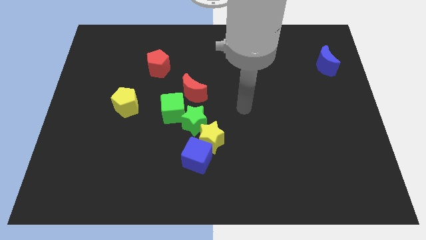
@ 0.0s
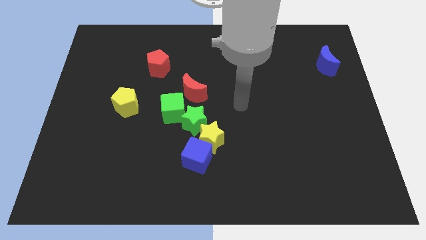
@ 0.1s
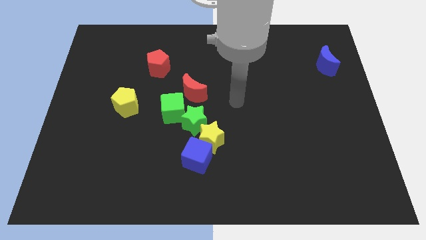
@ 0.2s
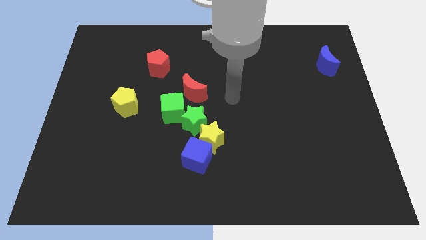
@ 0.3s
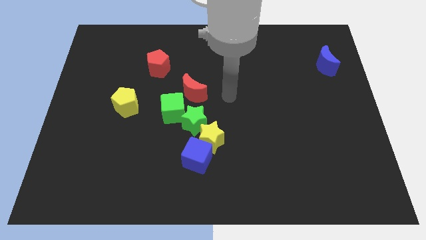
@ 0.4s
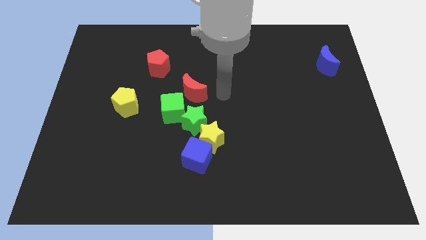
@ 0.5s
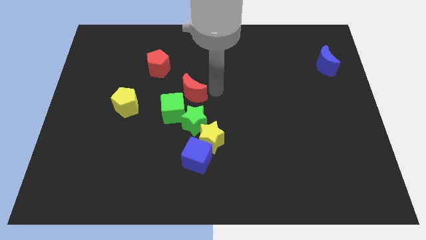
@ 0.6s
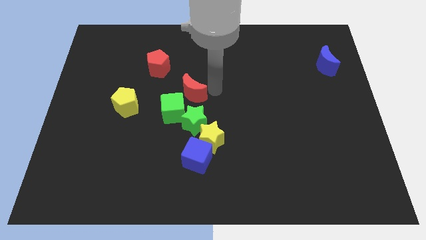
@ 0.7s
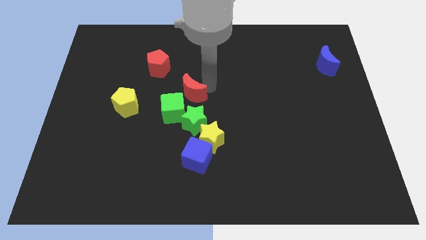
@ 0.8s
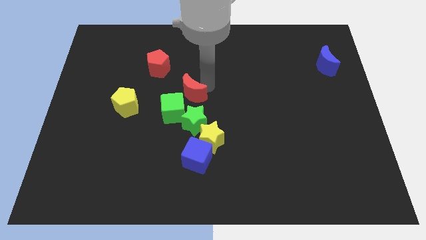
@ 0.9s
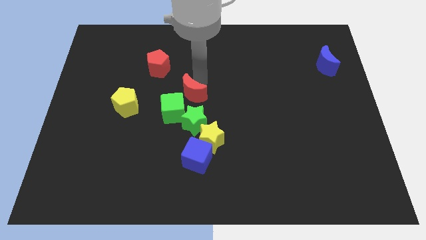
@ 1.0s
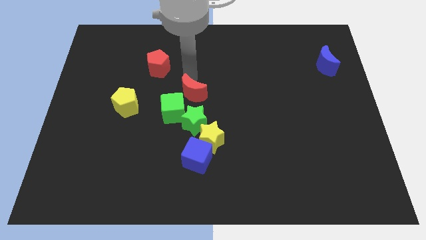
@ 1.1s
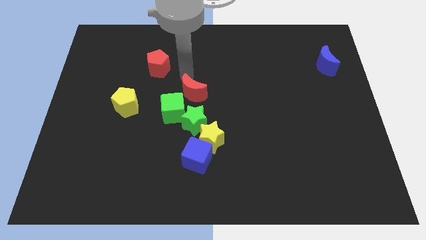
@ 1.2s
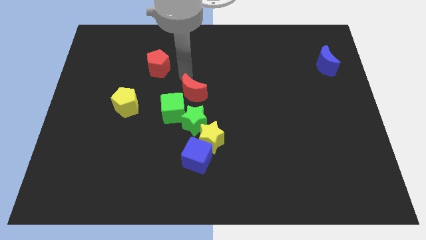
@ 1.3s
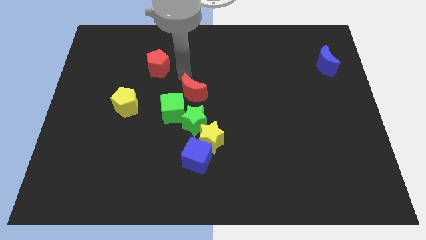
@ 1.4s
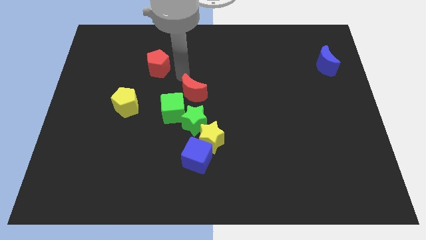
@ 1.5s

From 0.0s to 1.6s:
touch the red moon

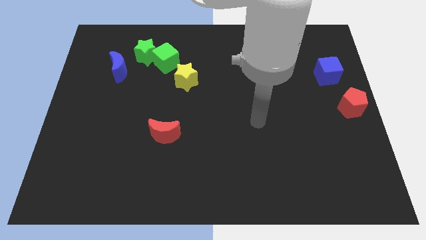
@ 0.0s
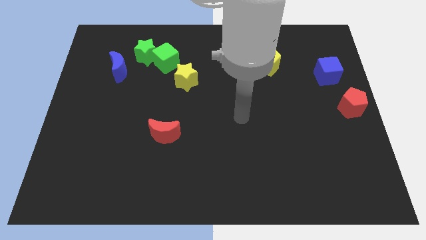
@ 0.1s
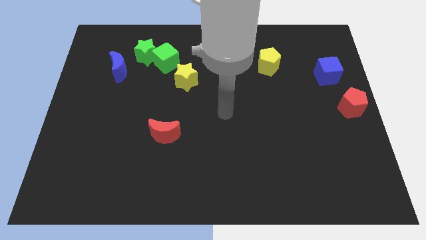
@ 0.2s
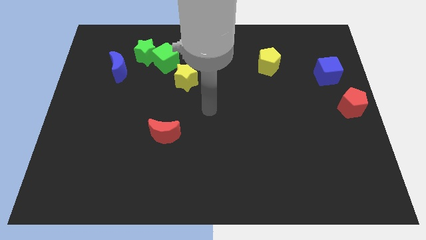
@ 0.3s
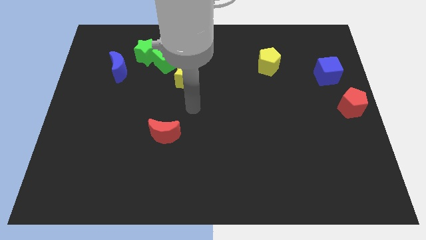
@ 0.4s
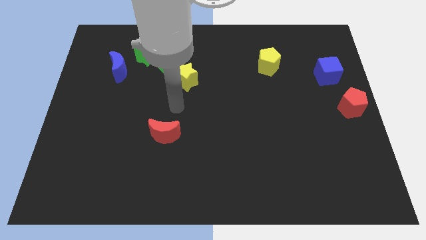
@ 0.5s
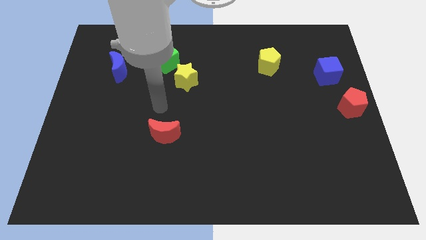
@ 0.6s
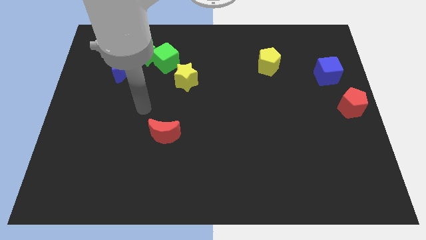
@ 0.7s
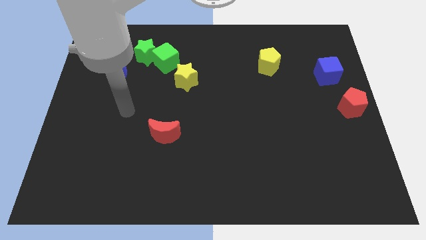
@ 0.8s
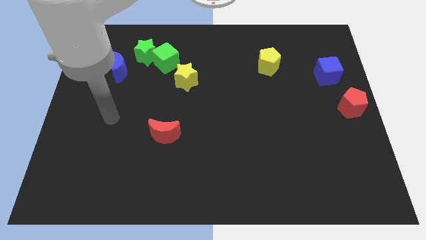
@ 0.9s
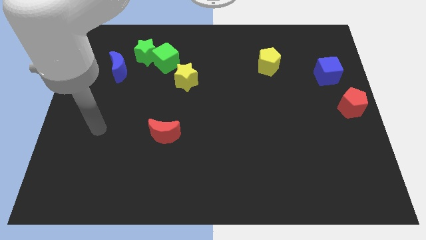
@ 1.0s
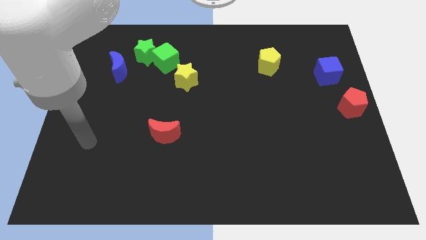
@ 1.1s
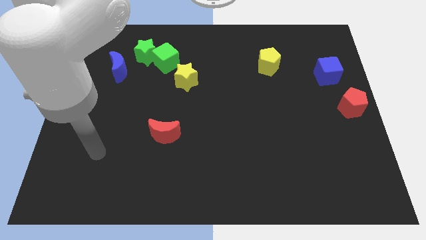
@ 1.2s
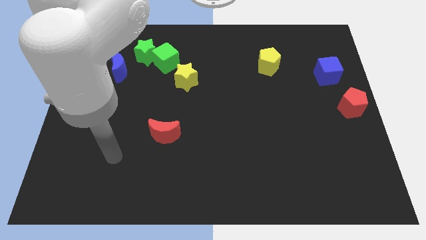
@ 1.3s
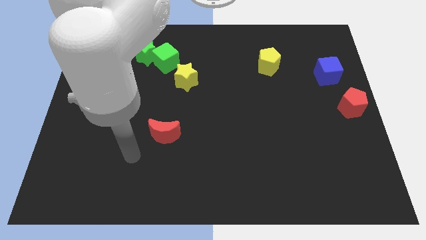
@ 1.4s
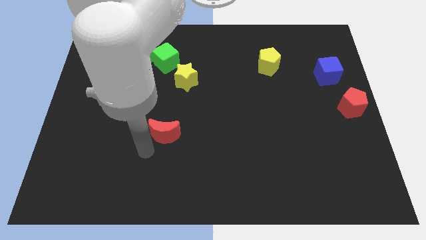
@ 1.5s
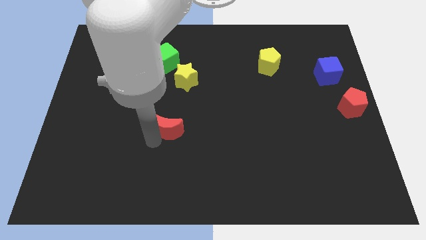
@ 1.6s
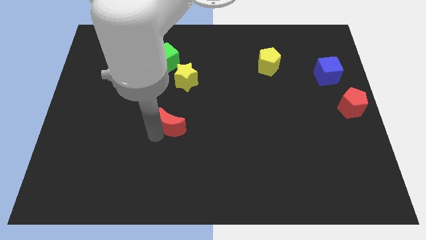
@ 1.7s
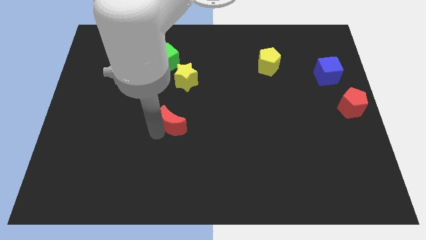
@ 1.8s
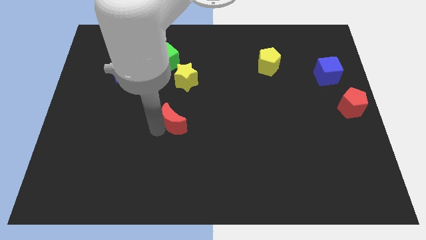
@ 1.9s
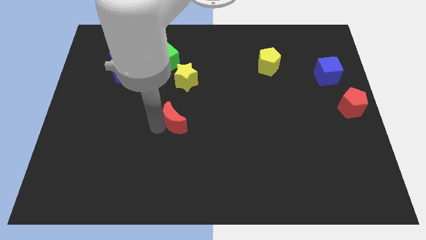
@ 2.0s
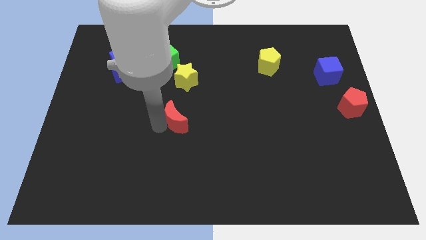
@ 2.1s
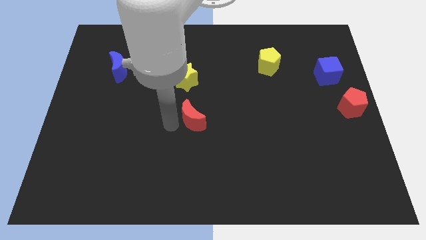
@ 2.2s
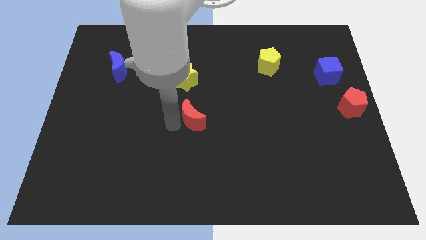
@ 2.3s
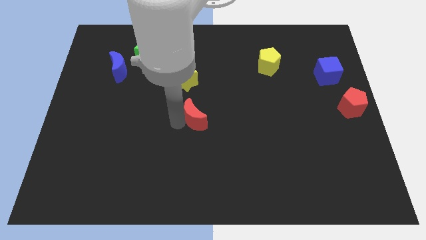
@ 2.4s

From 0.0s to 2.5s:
place the red moon down to the yellow star

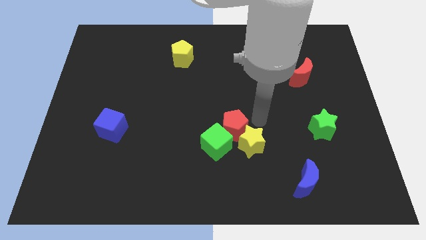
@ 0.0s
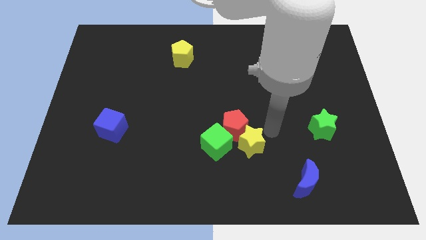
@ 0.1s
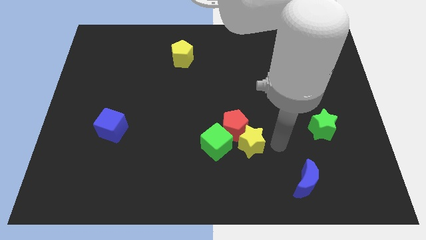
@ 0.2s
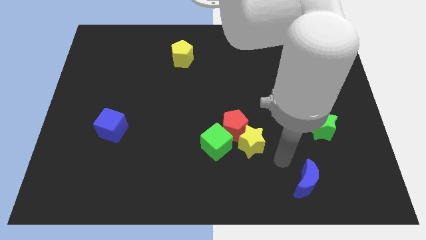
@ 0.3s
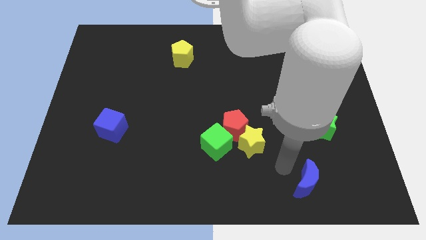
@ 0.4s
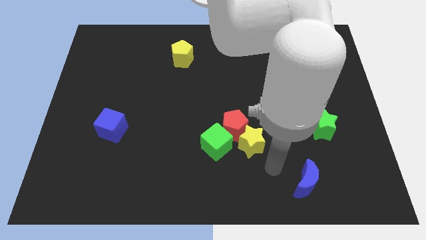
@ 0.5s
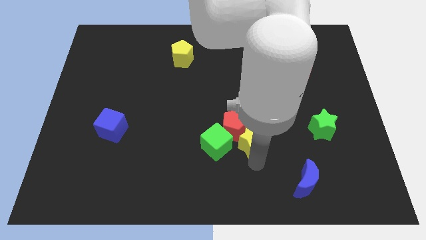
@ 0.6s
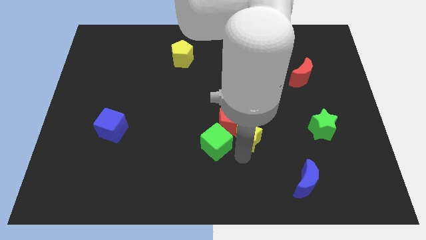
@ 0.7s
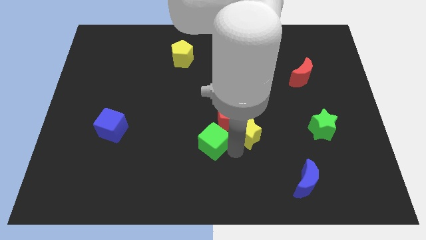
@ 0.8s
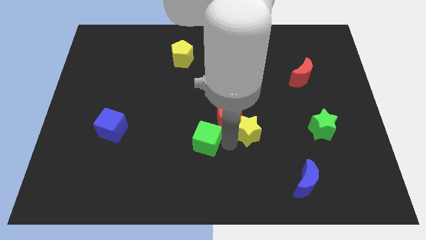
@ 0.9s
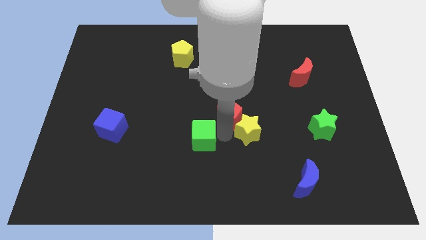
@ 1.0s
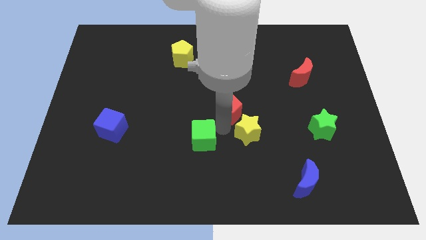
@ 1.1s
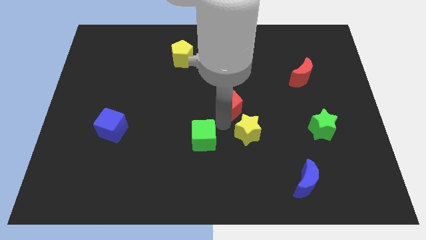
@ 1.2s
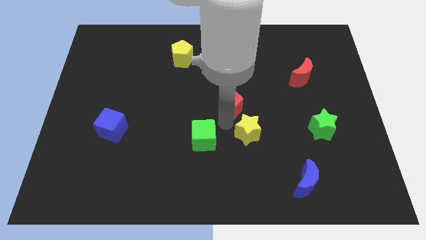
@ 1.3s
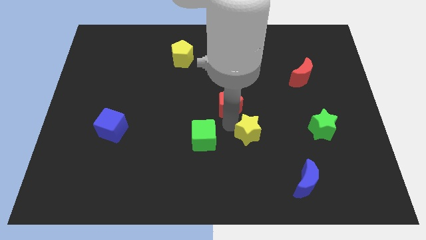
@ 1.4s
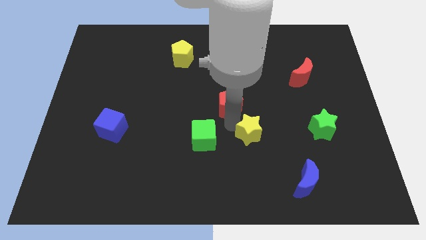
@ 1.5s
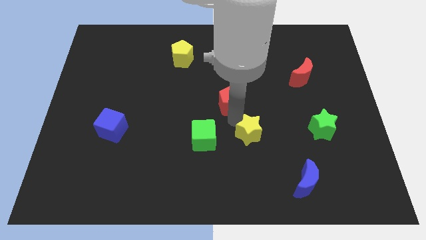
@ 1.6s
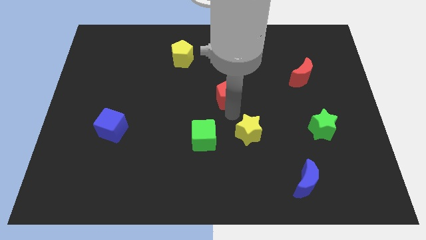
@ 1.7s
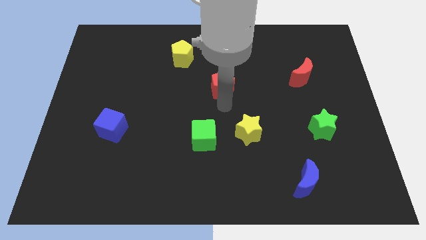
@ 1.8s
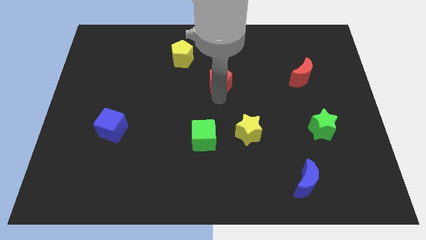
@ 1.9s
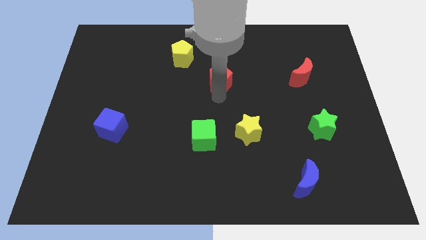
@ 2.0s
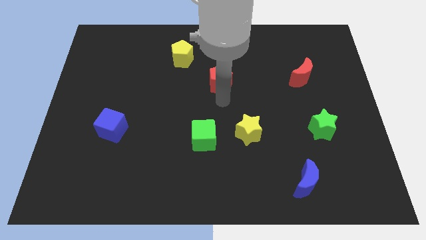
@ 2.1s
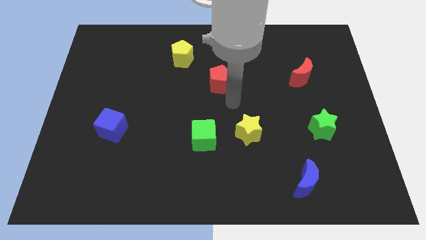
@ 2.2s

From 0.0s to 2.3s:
separate red pentagon from yellow star

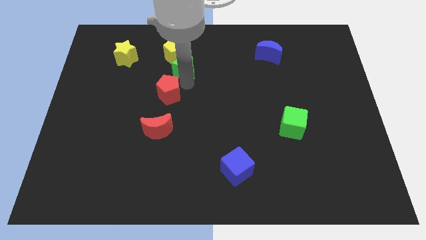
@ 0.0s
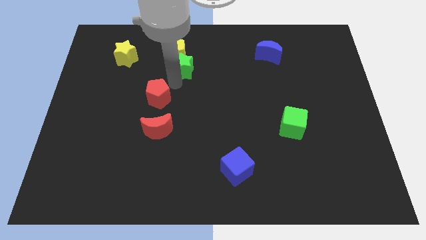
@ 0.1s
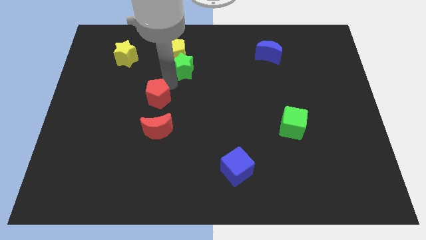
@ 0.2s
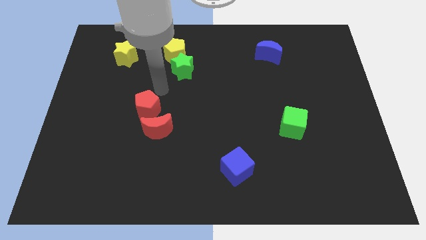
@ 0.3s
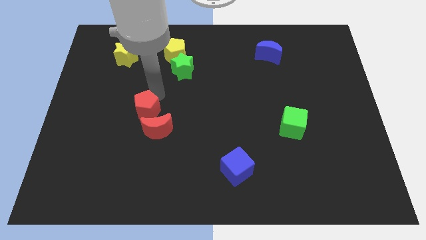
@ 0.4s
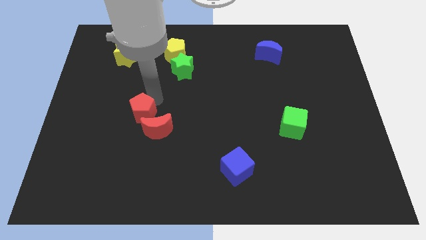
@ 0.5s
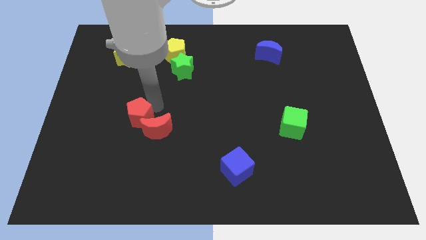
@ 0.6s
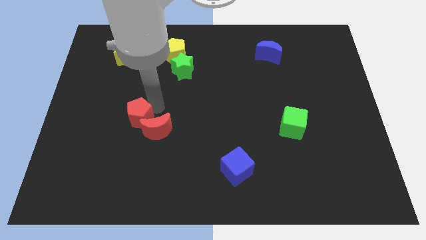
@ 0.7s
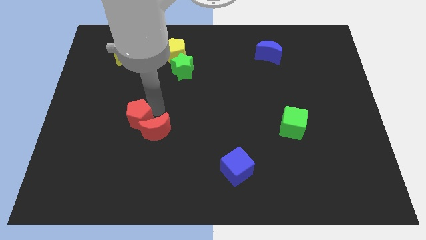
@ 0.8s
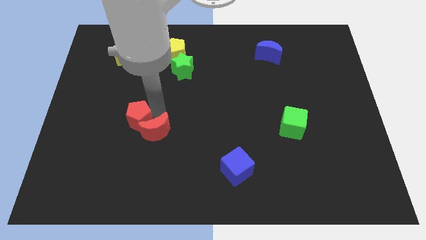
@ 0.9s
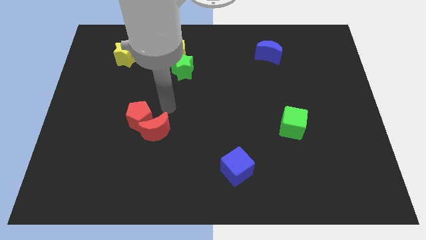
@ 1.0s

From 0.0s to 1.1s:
move the red pentagon into the red crescent

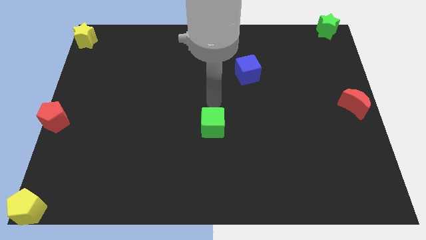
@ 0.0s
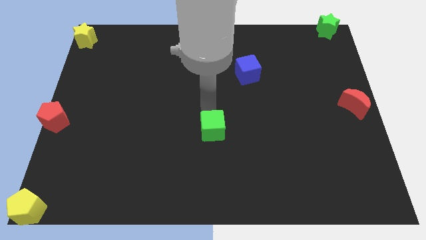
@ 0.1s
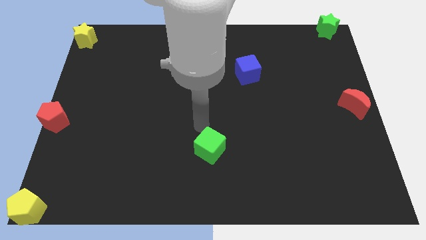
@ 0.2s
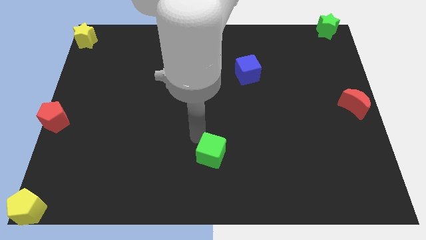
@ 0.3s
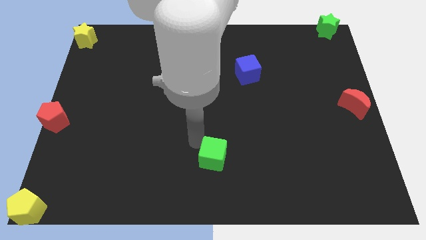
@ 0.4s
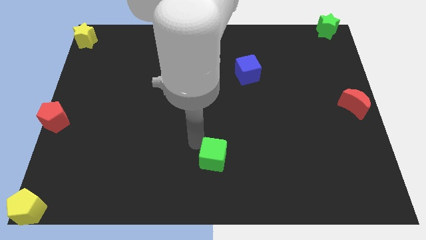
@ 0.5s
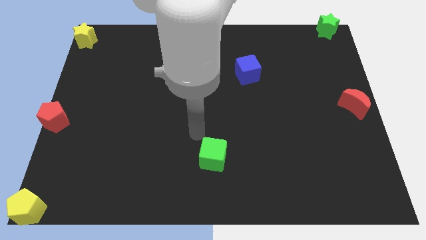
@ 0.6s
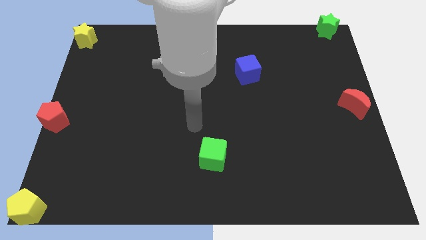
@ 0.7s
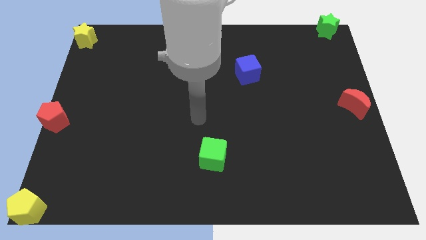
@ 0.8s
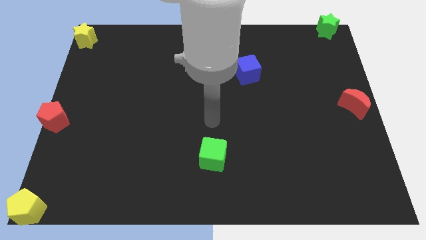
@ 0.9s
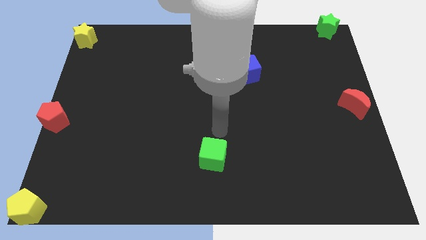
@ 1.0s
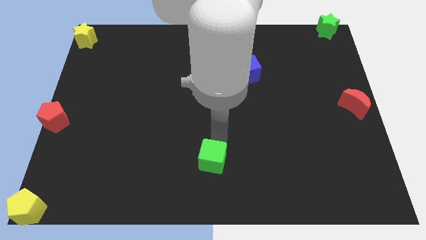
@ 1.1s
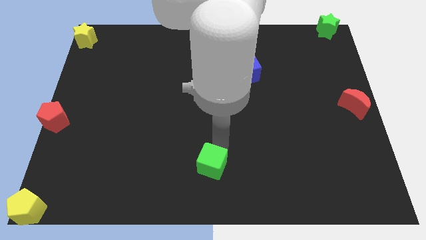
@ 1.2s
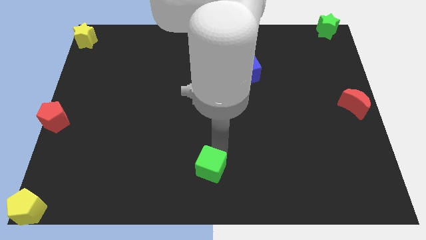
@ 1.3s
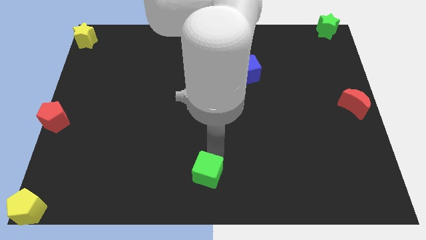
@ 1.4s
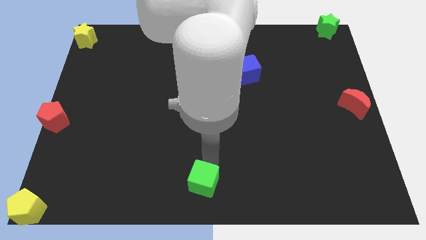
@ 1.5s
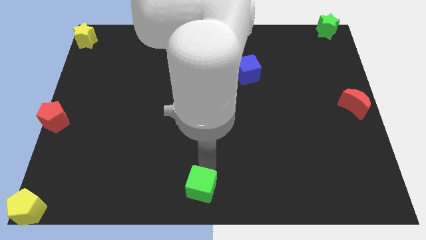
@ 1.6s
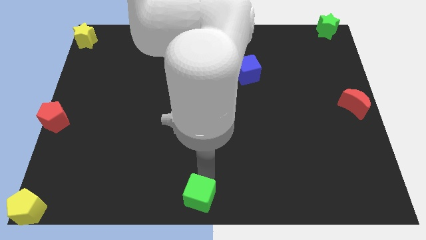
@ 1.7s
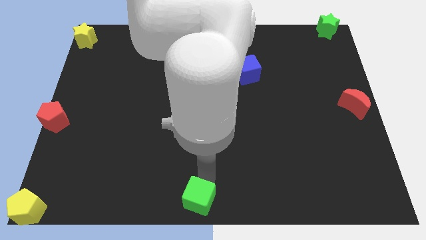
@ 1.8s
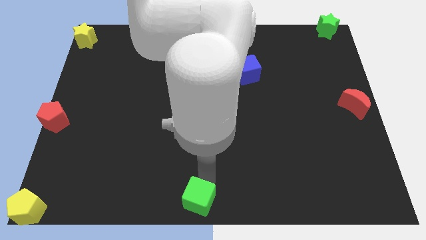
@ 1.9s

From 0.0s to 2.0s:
put the green cube at bottom center of the board
